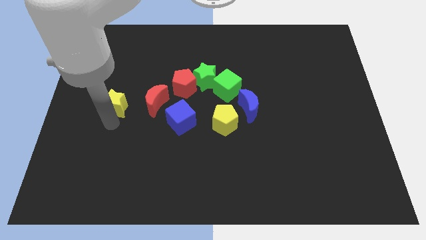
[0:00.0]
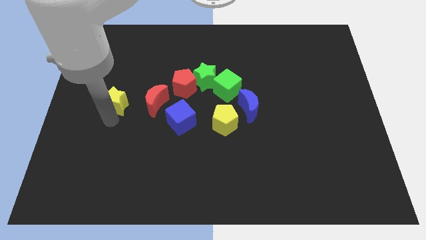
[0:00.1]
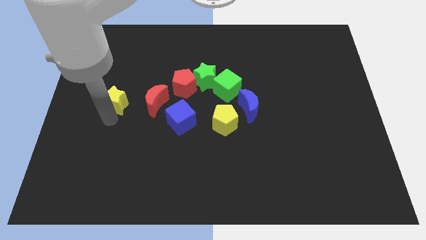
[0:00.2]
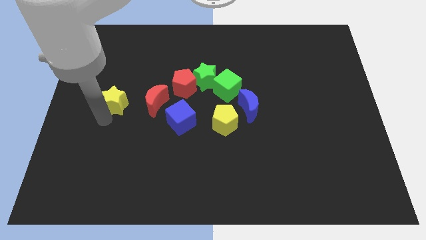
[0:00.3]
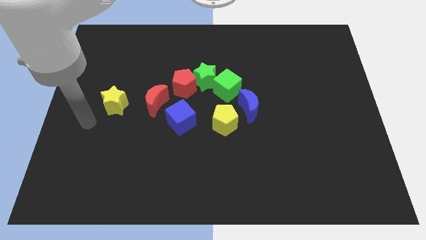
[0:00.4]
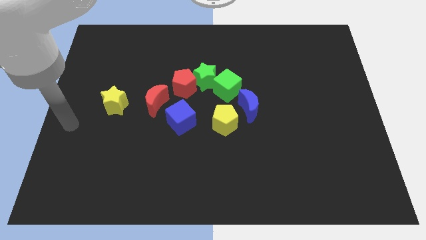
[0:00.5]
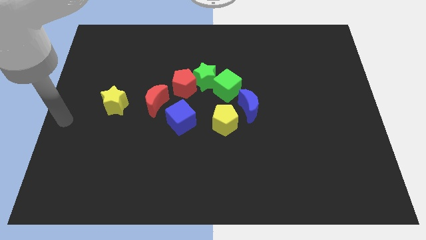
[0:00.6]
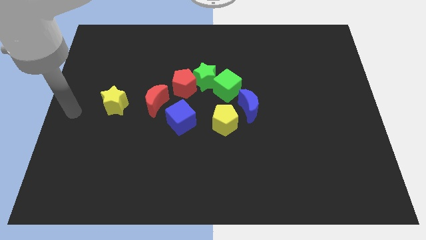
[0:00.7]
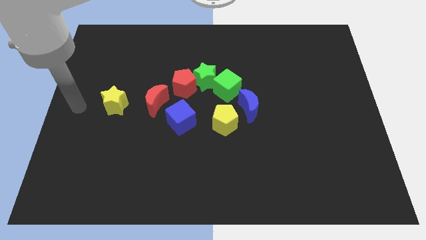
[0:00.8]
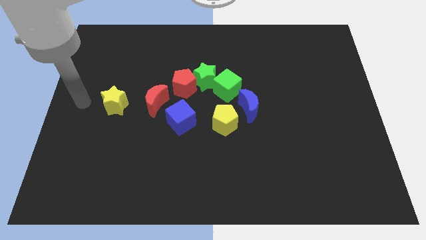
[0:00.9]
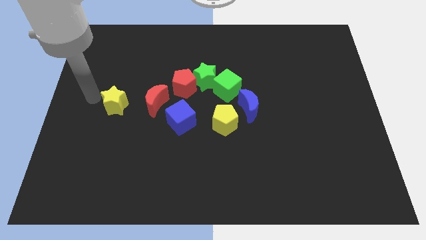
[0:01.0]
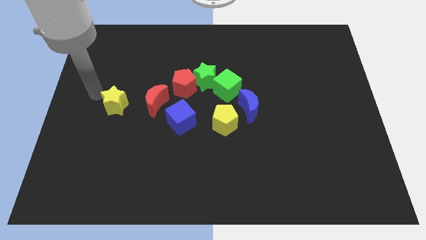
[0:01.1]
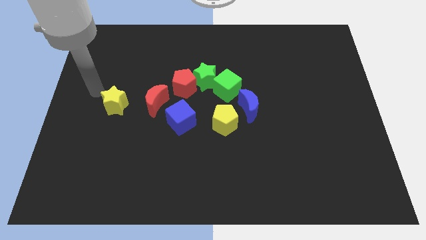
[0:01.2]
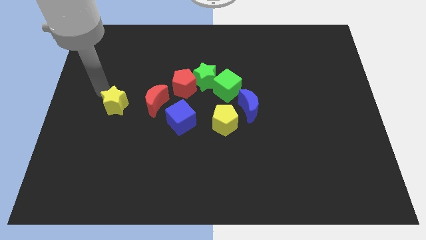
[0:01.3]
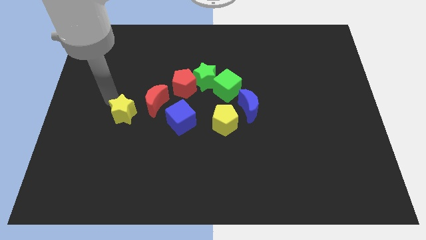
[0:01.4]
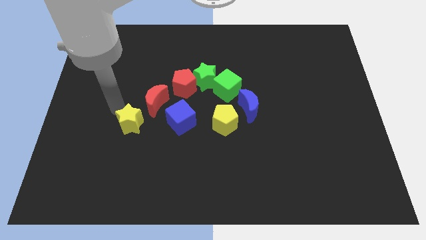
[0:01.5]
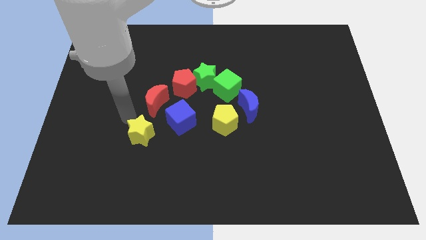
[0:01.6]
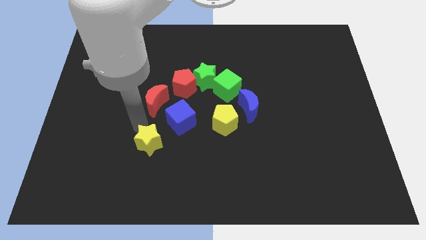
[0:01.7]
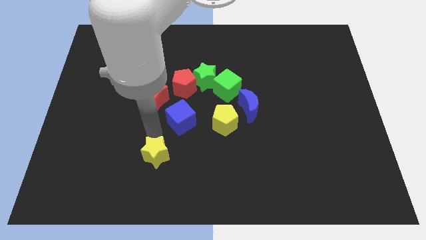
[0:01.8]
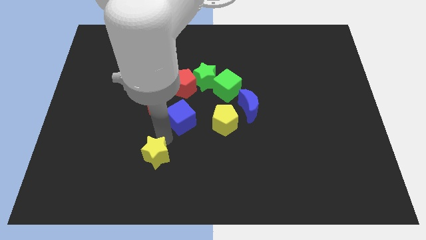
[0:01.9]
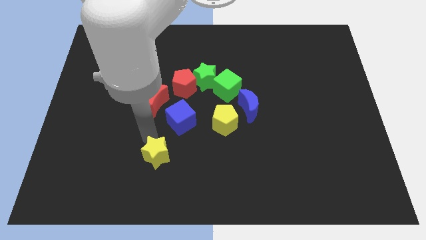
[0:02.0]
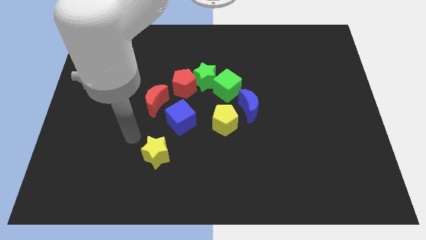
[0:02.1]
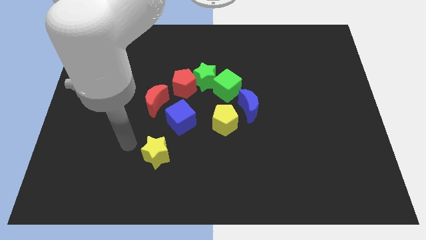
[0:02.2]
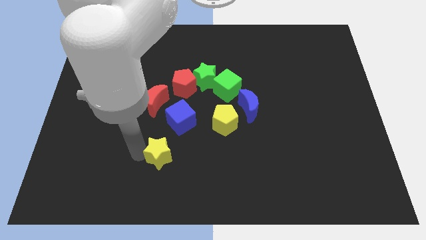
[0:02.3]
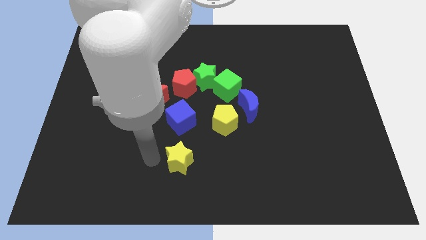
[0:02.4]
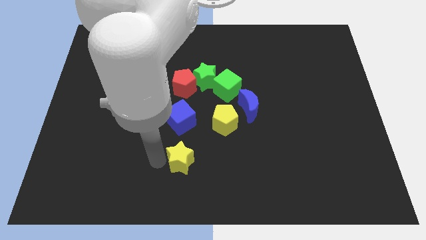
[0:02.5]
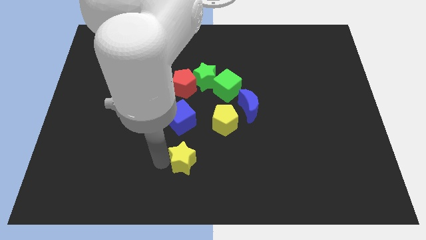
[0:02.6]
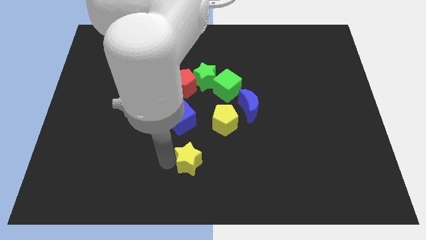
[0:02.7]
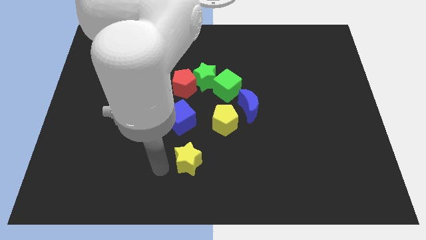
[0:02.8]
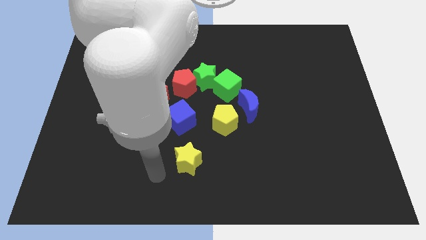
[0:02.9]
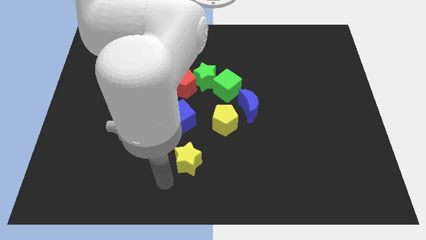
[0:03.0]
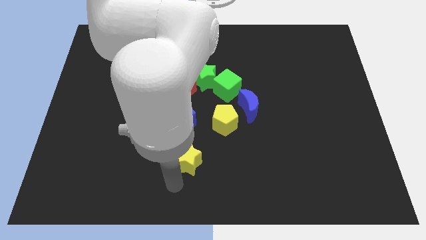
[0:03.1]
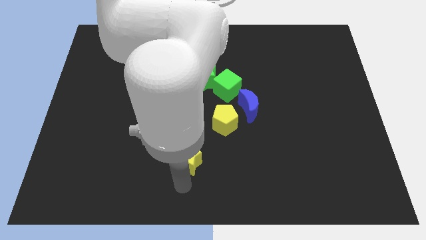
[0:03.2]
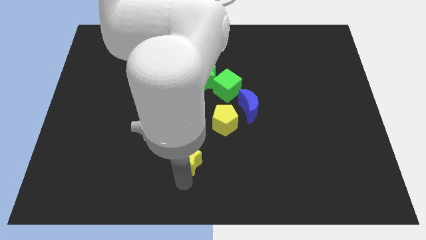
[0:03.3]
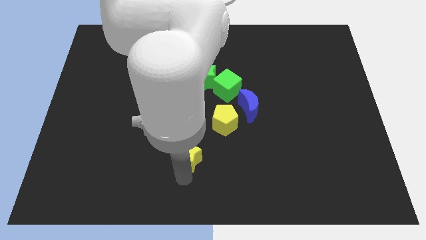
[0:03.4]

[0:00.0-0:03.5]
put the yellow star below the blue cube

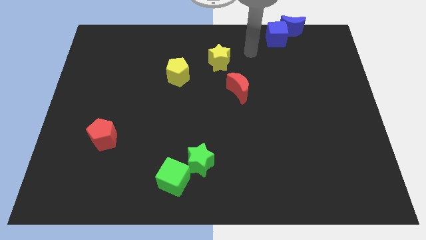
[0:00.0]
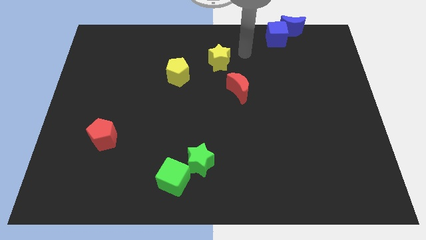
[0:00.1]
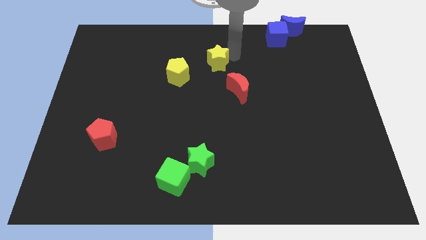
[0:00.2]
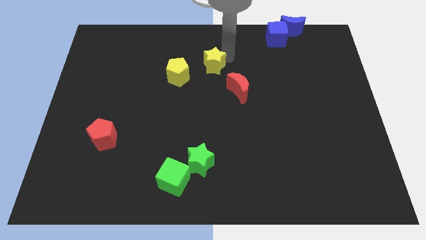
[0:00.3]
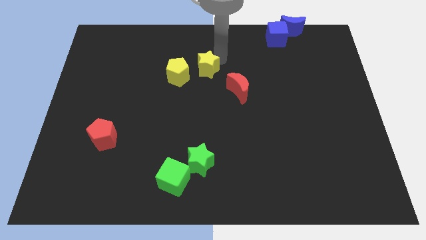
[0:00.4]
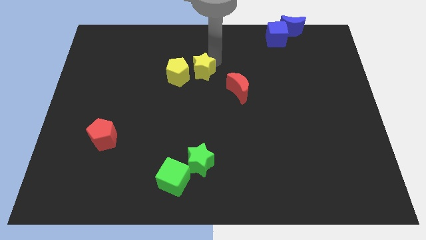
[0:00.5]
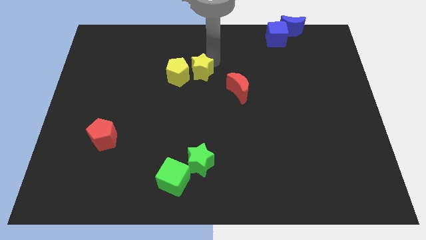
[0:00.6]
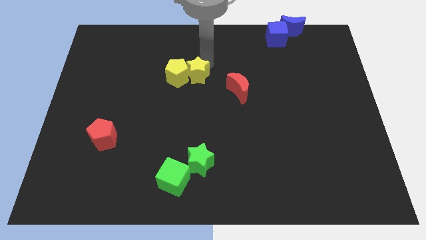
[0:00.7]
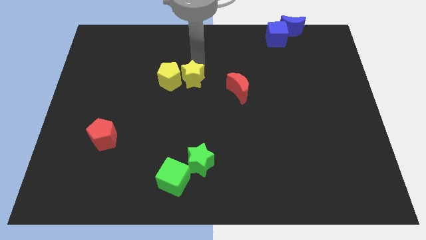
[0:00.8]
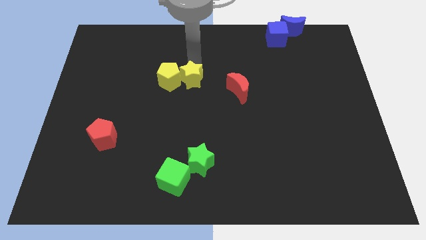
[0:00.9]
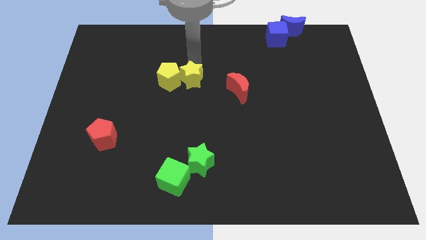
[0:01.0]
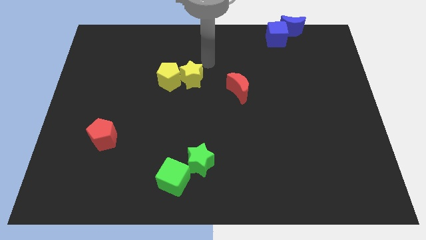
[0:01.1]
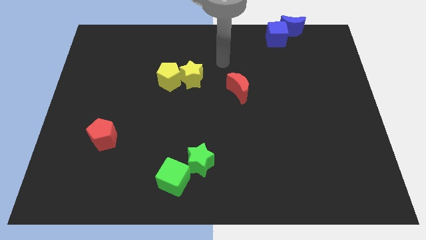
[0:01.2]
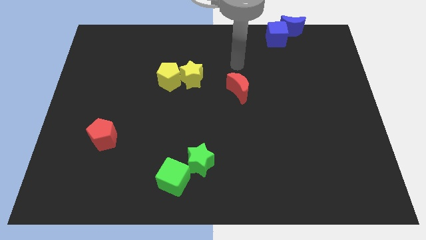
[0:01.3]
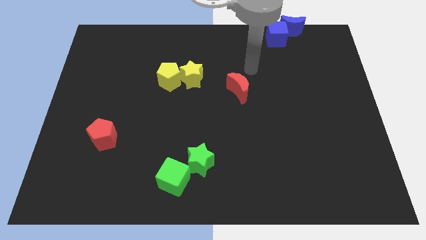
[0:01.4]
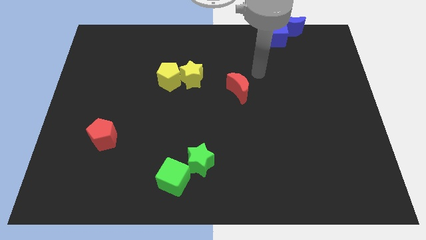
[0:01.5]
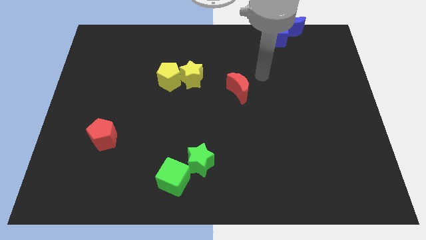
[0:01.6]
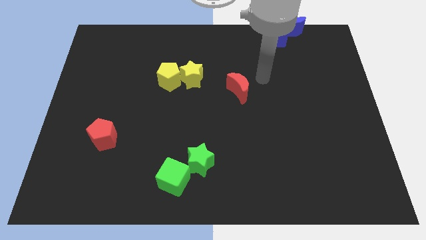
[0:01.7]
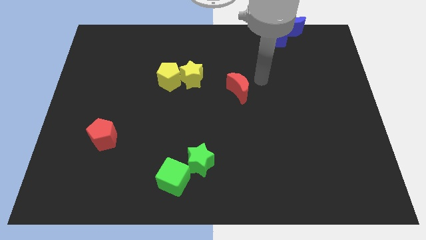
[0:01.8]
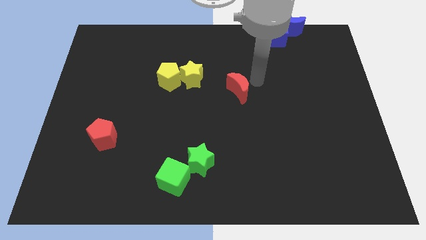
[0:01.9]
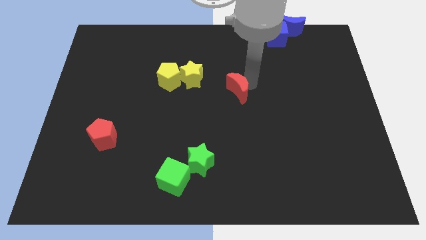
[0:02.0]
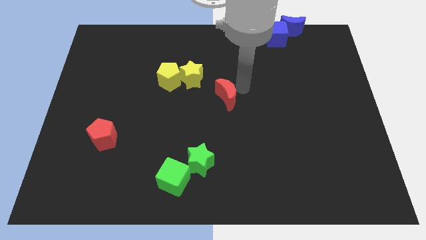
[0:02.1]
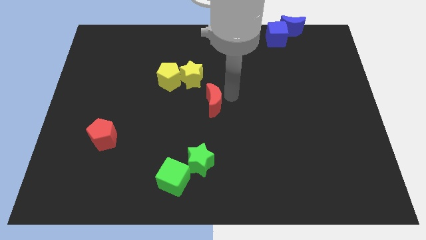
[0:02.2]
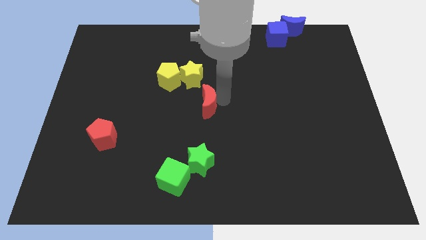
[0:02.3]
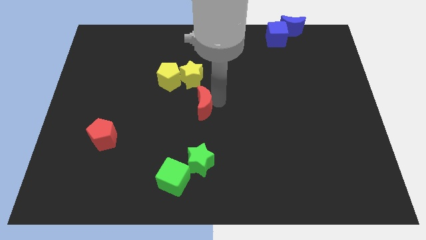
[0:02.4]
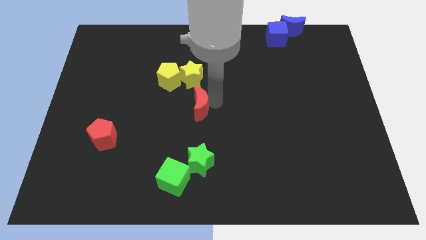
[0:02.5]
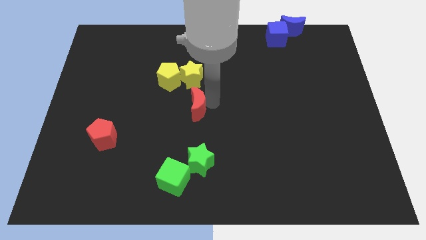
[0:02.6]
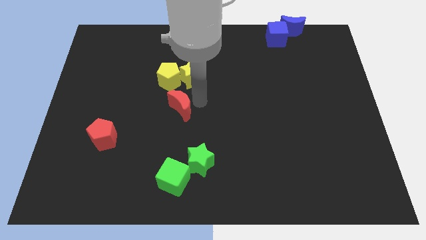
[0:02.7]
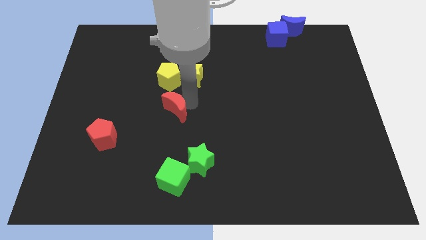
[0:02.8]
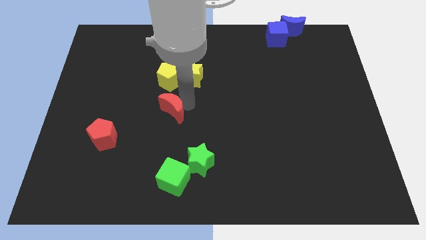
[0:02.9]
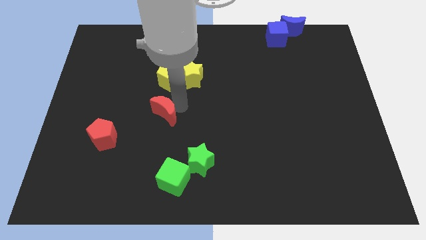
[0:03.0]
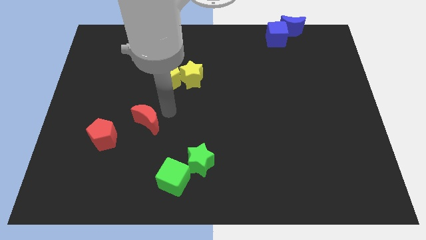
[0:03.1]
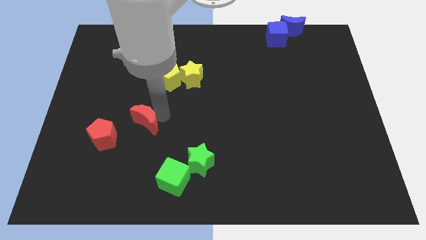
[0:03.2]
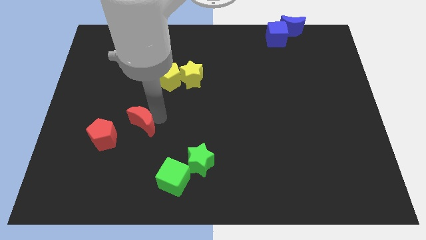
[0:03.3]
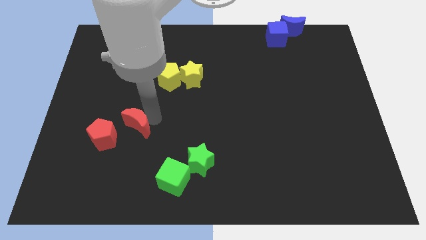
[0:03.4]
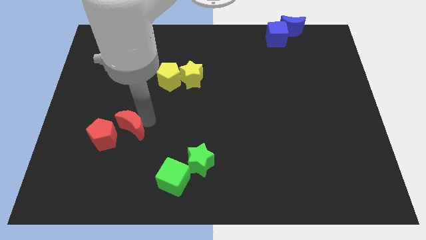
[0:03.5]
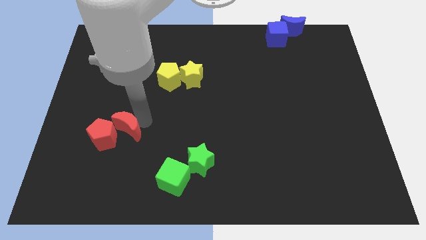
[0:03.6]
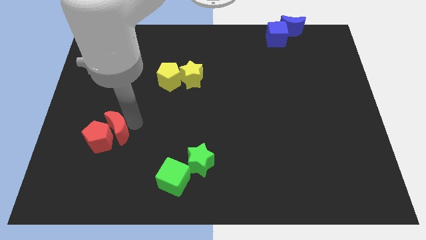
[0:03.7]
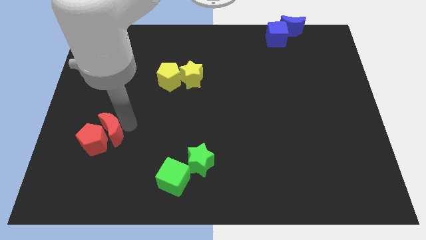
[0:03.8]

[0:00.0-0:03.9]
arrange both the yellow blocks and red blocks diagonal to each other

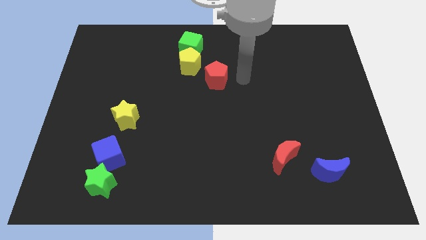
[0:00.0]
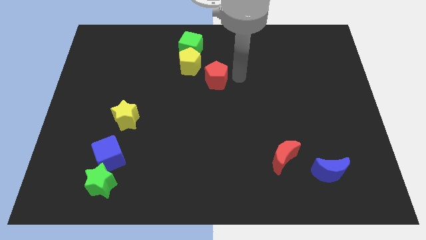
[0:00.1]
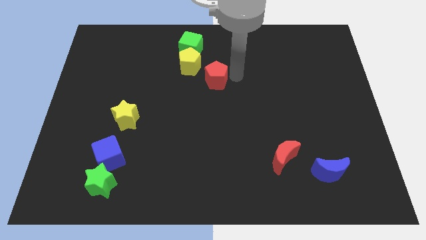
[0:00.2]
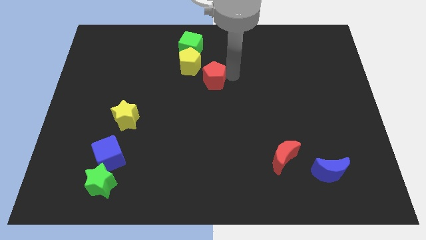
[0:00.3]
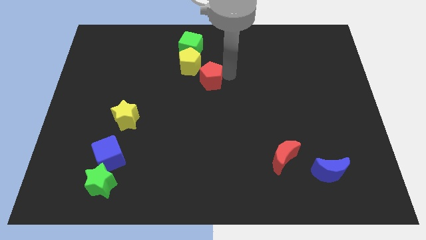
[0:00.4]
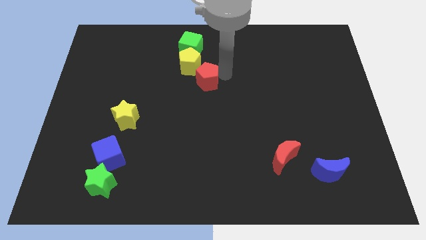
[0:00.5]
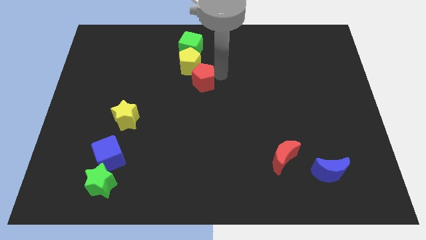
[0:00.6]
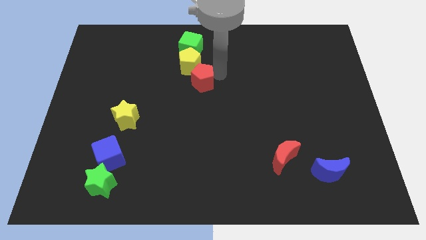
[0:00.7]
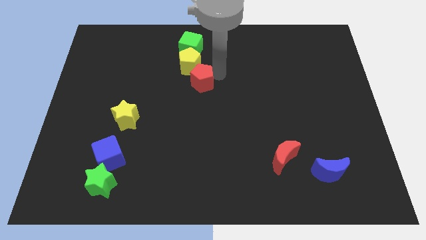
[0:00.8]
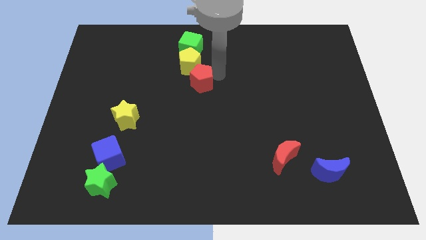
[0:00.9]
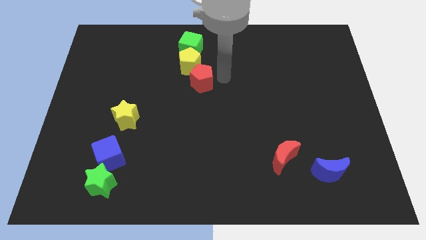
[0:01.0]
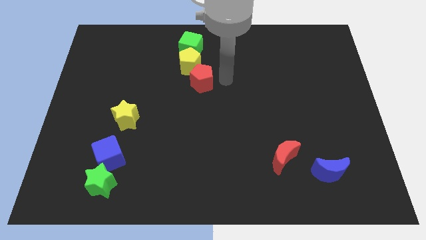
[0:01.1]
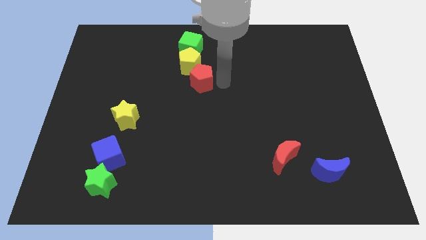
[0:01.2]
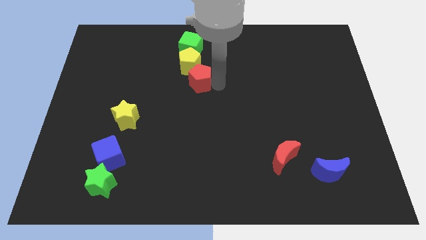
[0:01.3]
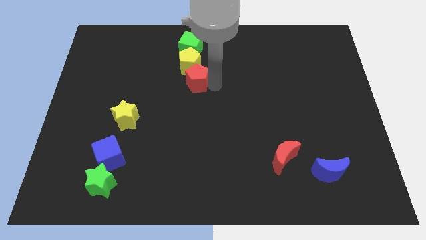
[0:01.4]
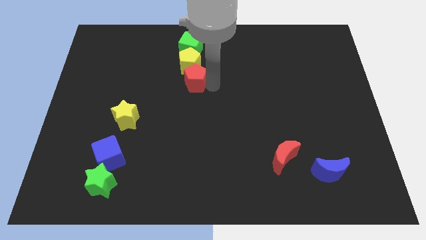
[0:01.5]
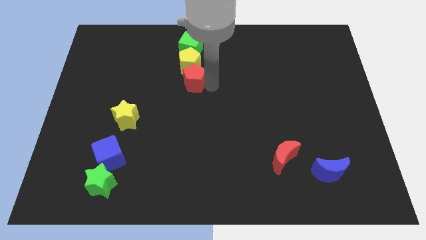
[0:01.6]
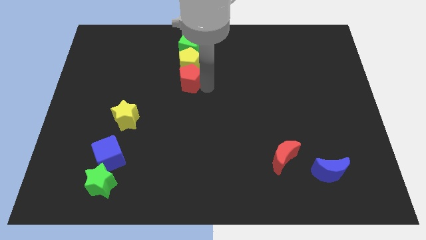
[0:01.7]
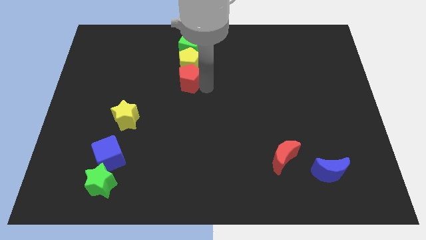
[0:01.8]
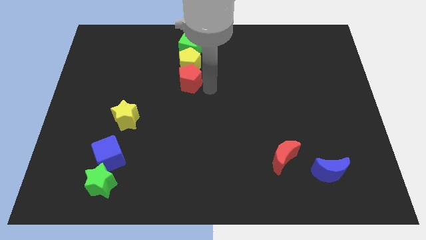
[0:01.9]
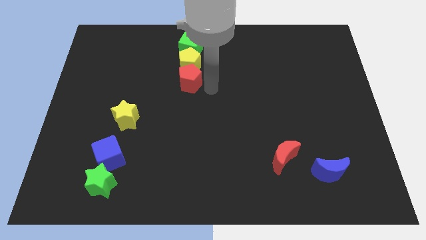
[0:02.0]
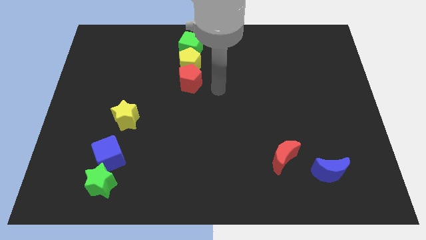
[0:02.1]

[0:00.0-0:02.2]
place red pentagon to the bottom of yellow pentagon
